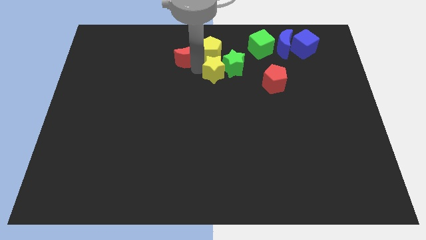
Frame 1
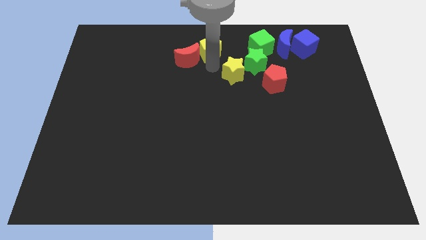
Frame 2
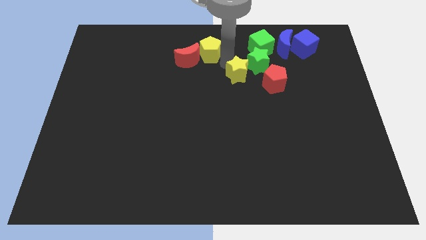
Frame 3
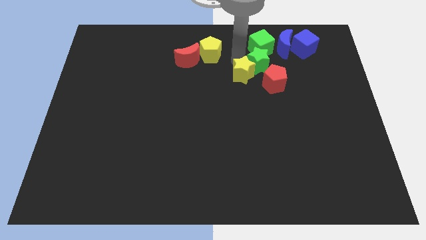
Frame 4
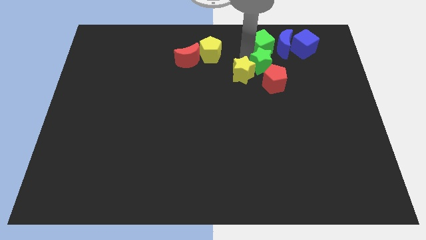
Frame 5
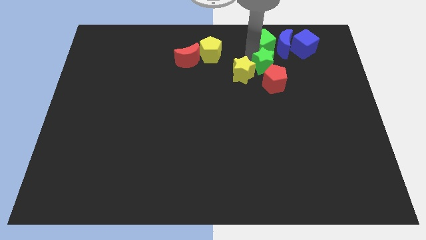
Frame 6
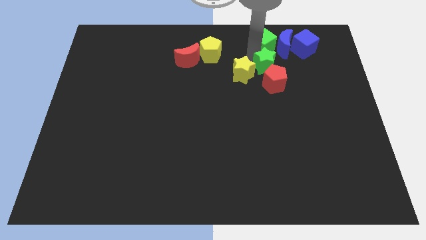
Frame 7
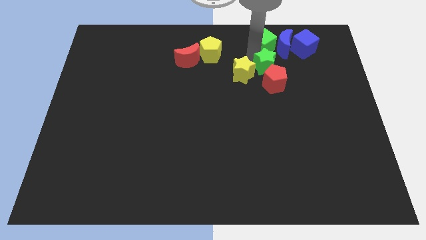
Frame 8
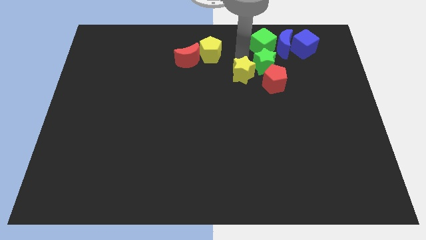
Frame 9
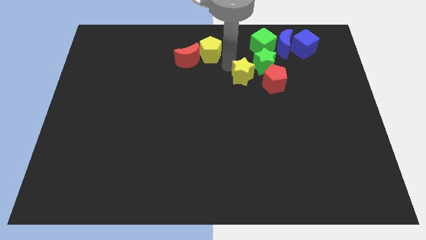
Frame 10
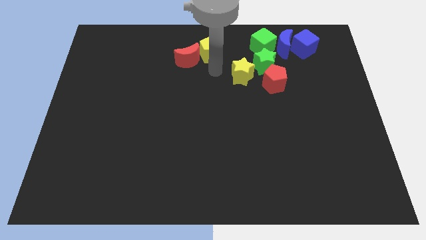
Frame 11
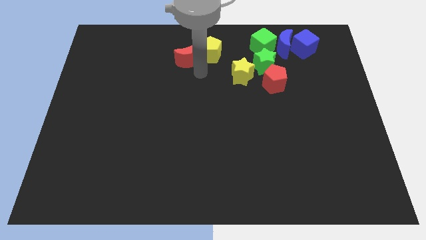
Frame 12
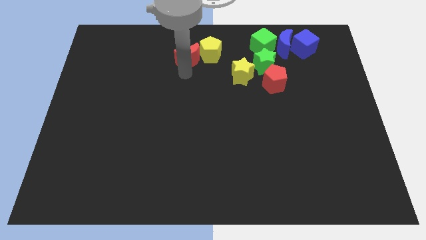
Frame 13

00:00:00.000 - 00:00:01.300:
move the stars away from the yellow pentagon

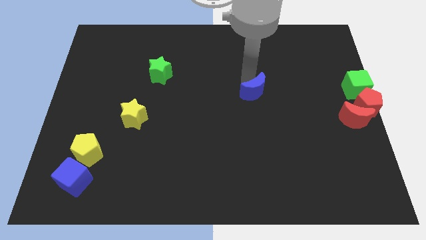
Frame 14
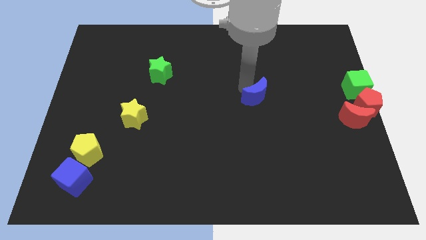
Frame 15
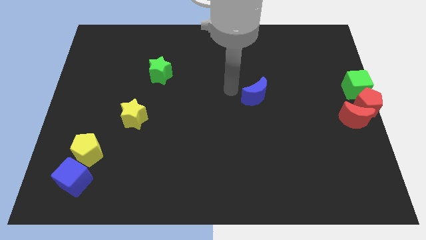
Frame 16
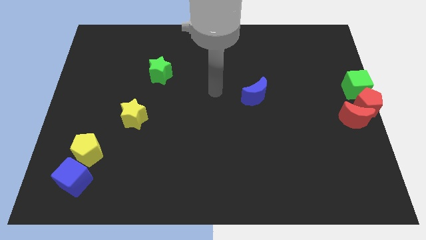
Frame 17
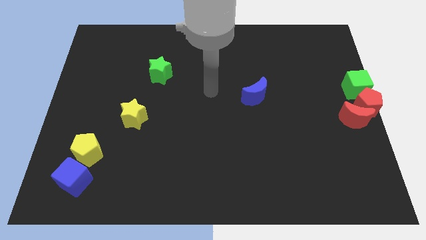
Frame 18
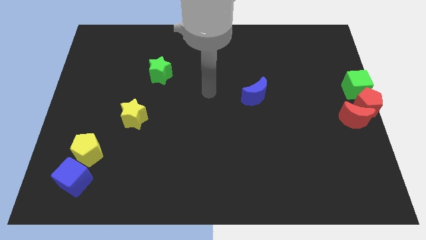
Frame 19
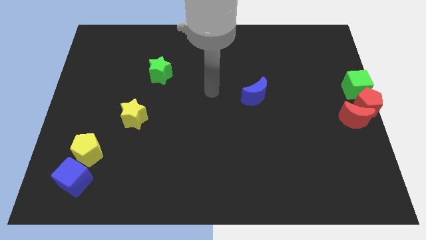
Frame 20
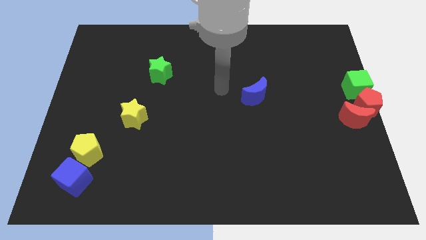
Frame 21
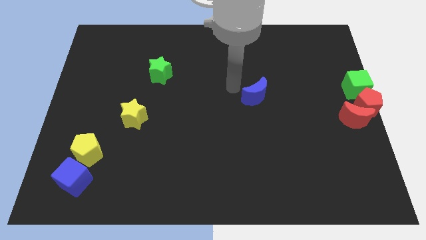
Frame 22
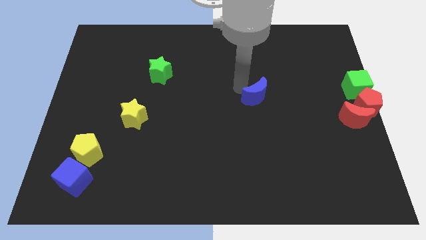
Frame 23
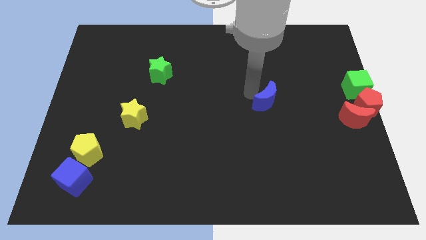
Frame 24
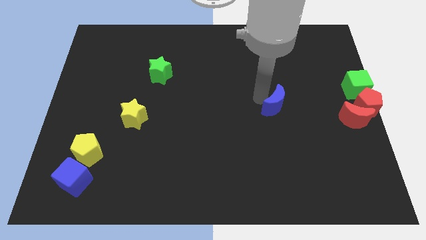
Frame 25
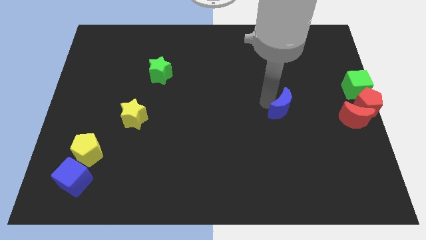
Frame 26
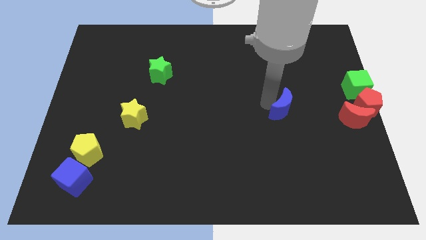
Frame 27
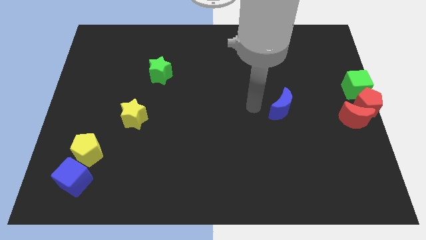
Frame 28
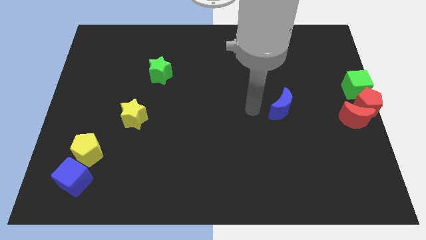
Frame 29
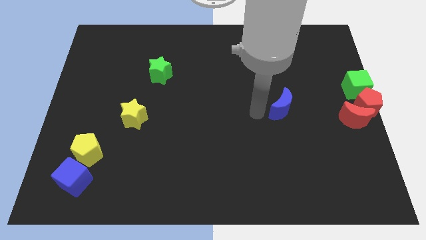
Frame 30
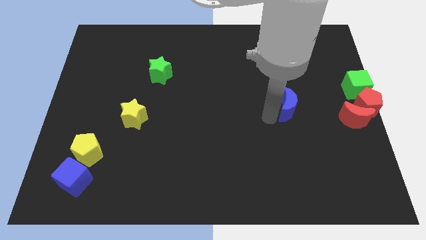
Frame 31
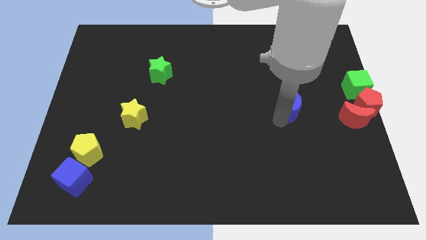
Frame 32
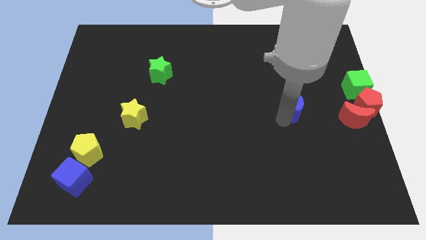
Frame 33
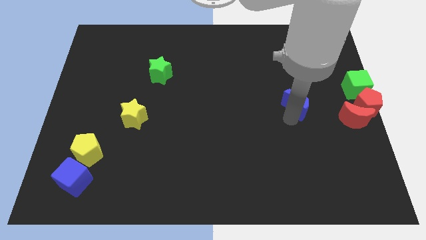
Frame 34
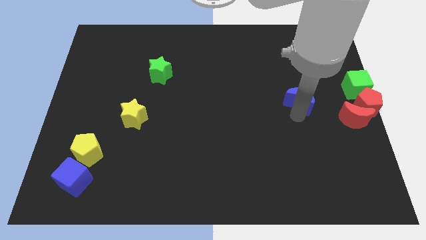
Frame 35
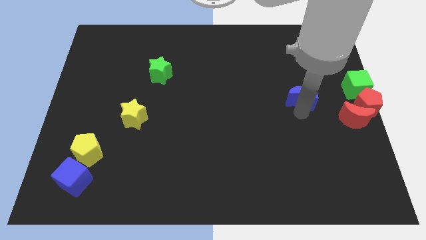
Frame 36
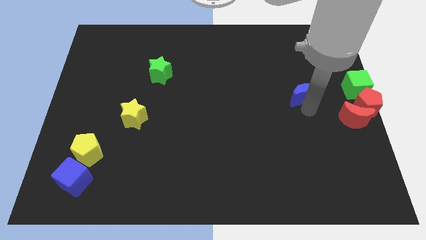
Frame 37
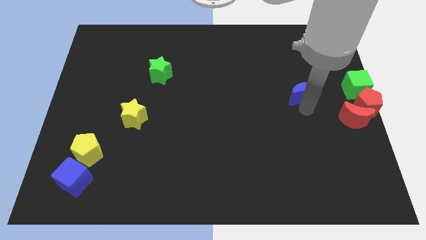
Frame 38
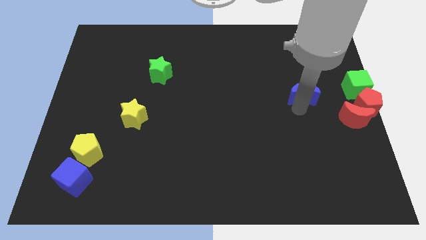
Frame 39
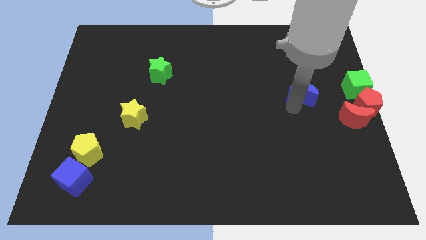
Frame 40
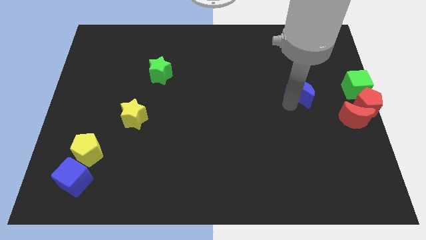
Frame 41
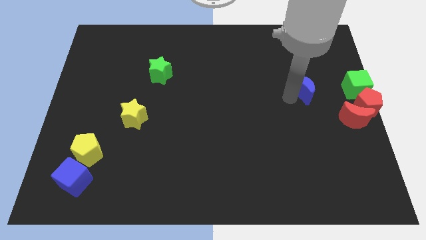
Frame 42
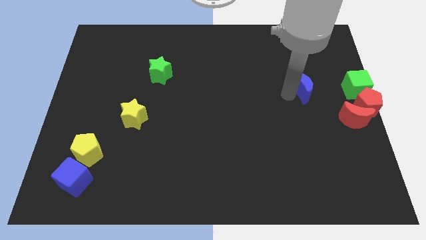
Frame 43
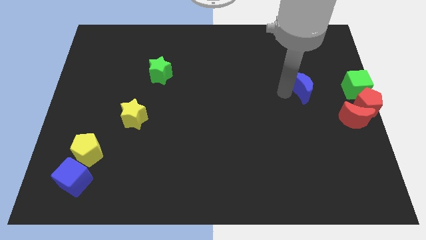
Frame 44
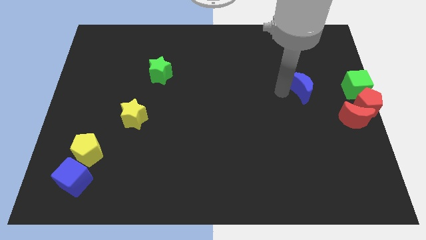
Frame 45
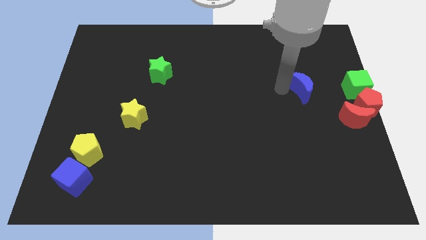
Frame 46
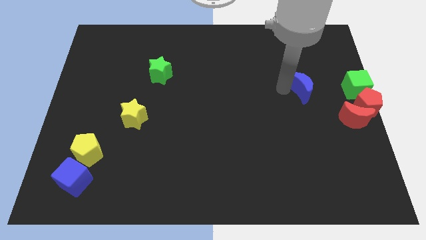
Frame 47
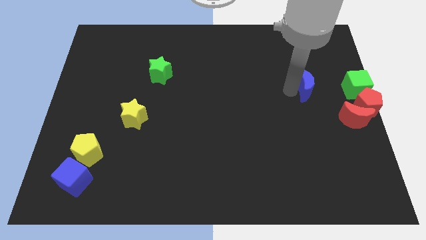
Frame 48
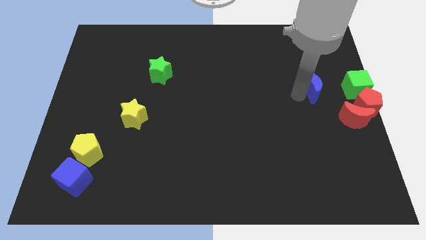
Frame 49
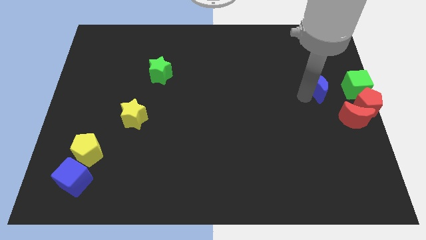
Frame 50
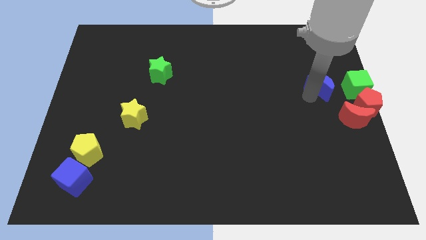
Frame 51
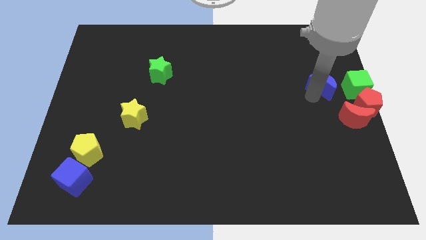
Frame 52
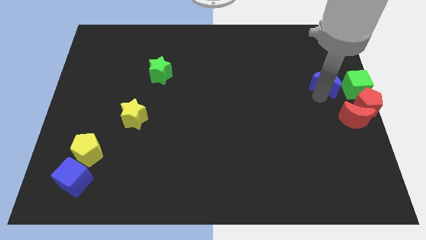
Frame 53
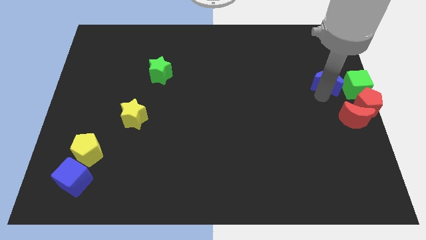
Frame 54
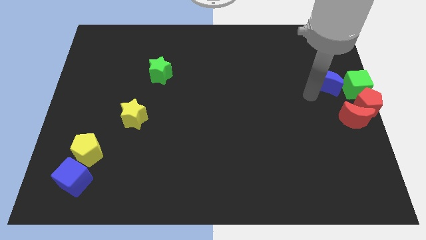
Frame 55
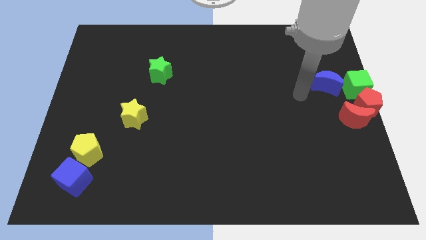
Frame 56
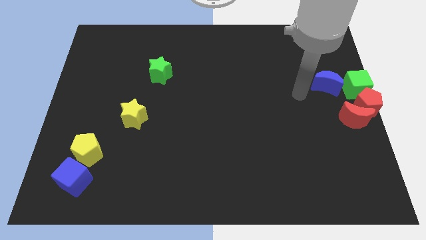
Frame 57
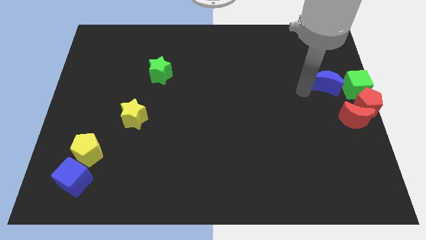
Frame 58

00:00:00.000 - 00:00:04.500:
drag the blue moon close to the green cube

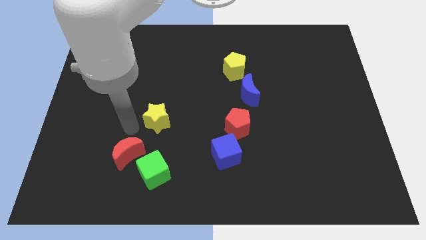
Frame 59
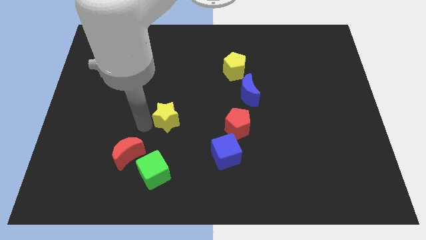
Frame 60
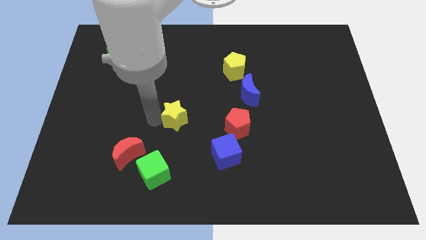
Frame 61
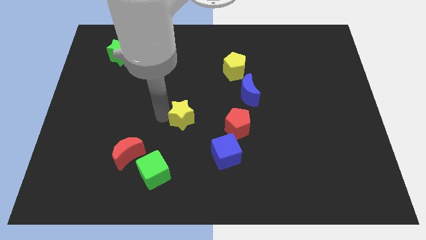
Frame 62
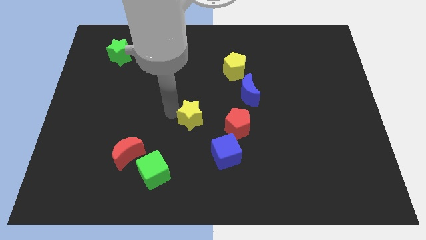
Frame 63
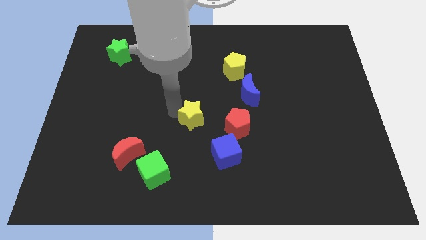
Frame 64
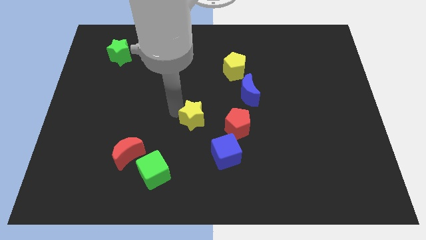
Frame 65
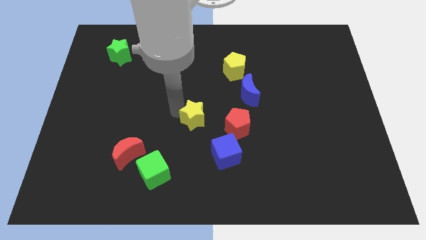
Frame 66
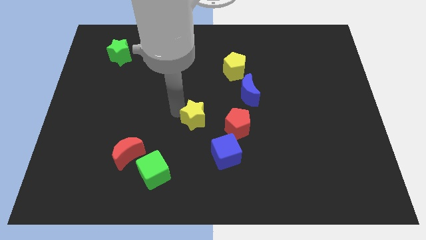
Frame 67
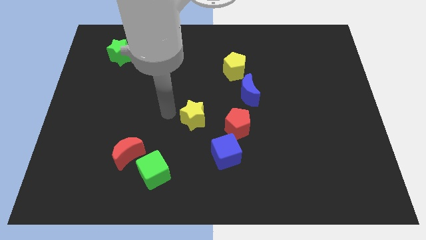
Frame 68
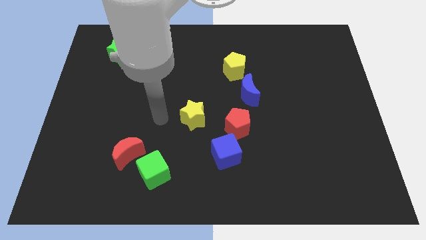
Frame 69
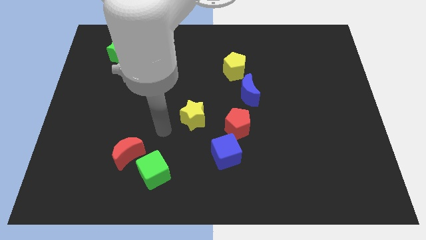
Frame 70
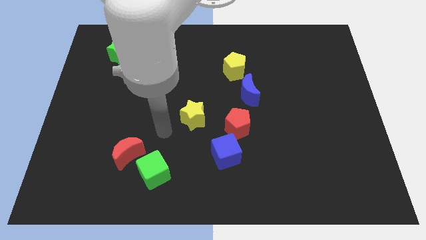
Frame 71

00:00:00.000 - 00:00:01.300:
put the yellow star diagonally in between the yellow pentagon and the green cube

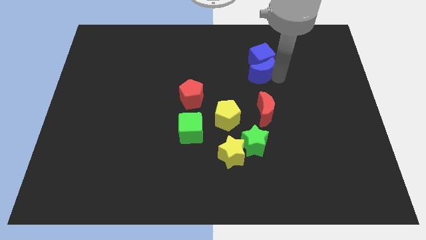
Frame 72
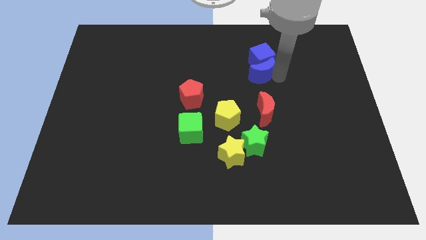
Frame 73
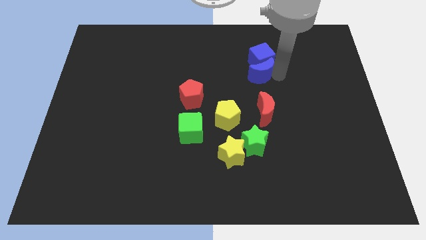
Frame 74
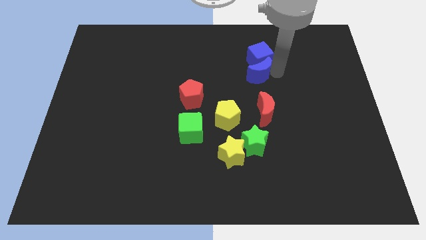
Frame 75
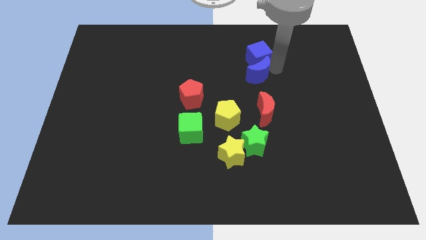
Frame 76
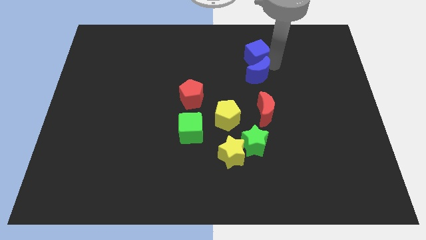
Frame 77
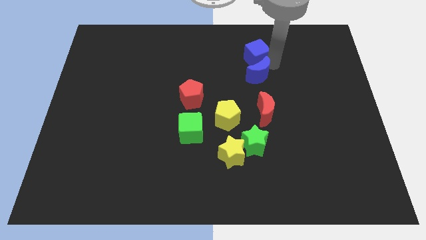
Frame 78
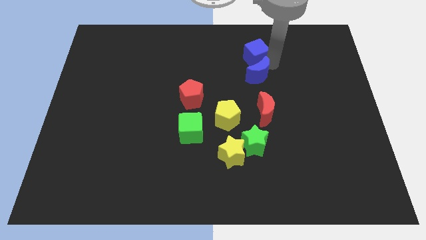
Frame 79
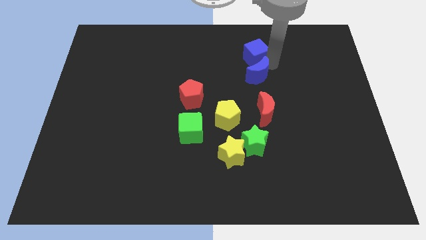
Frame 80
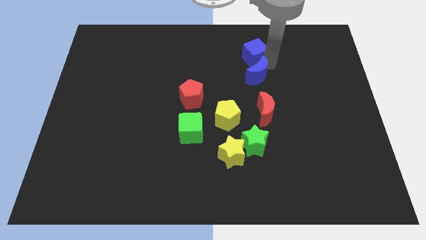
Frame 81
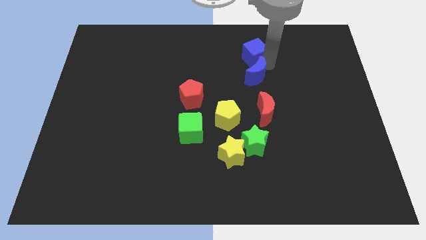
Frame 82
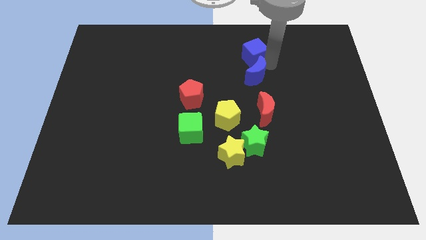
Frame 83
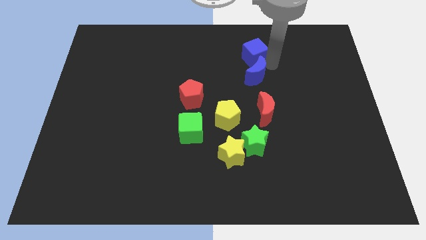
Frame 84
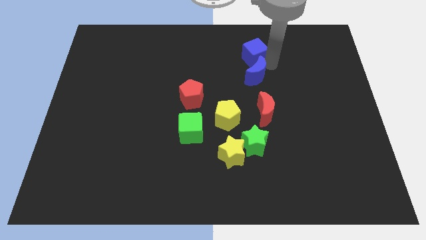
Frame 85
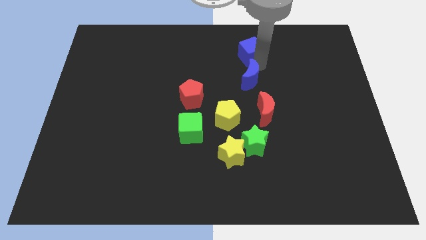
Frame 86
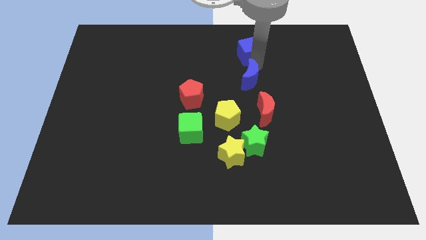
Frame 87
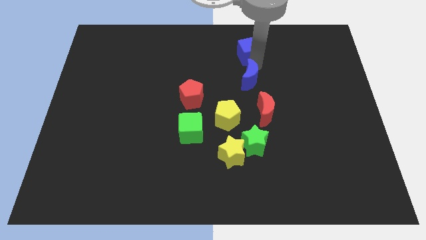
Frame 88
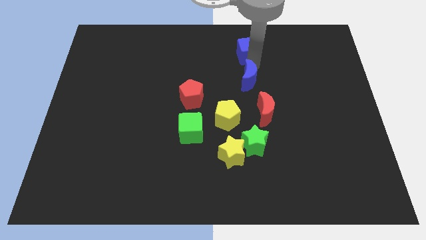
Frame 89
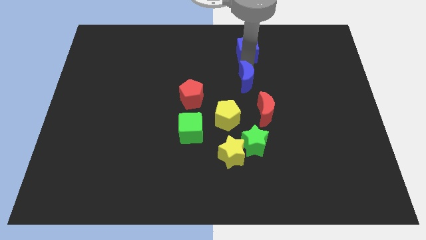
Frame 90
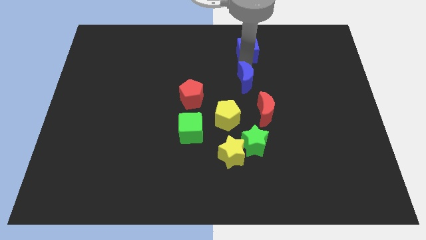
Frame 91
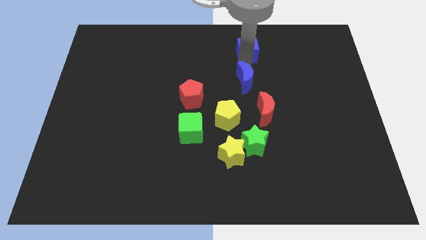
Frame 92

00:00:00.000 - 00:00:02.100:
separate blue cube and blue moon
